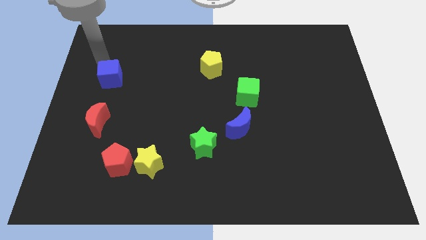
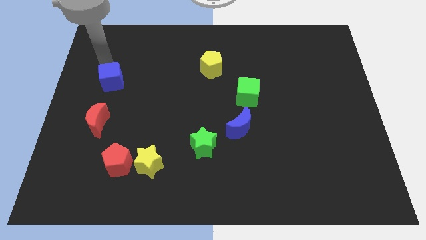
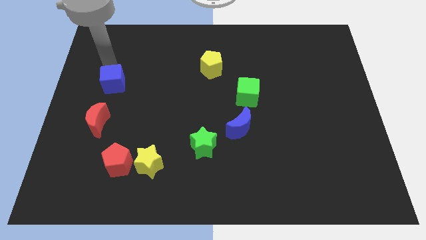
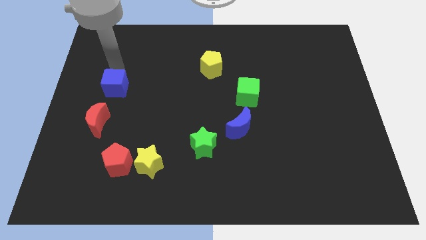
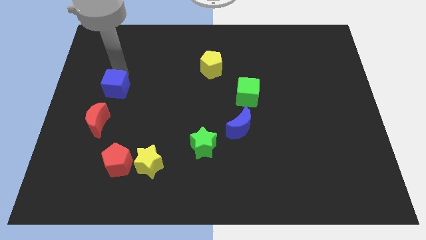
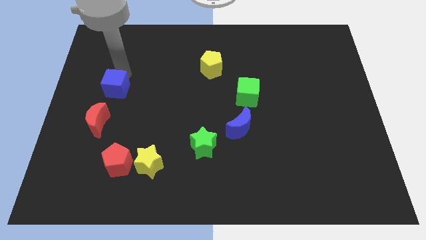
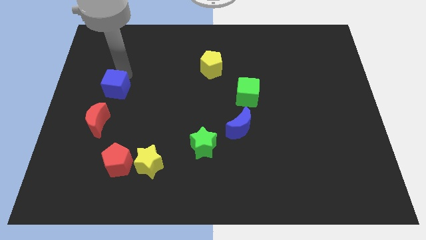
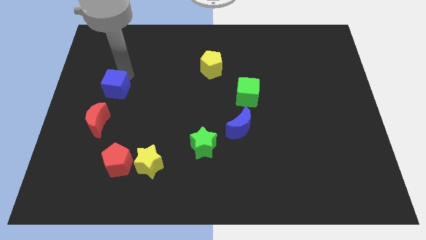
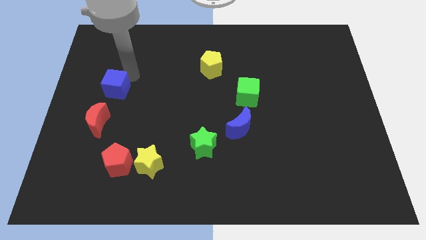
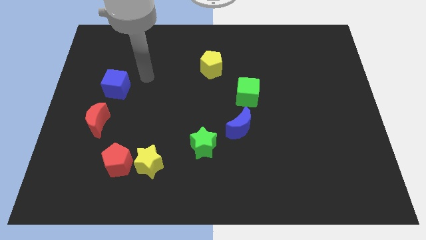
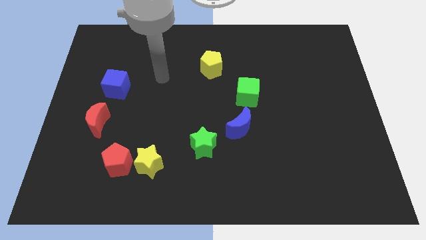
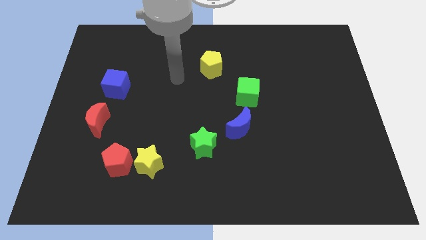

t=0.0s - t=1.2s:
move the blue cube above the red crescent

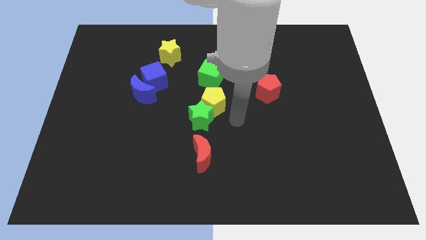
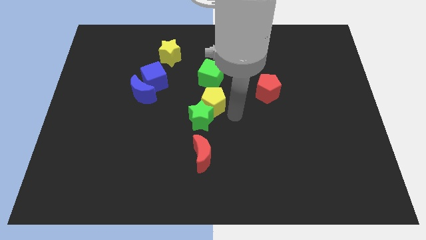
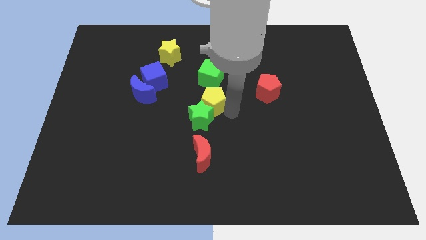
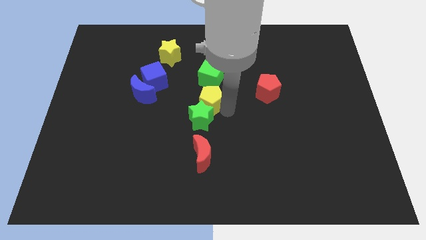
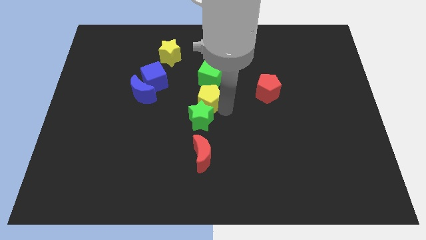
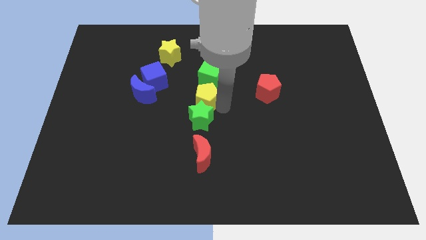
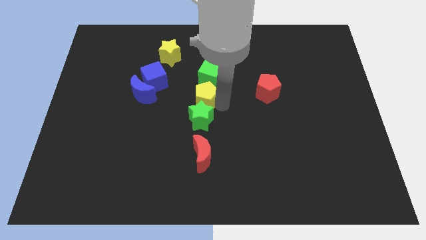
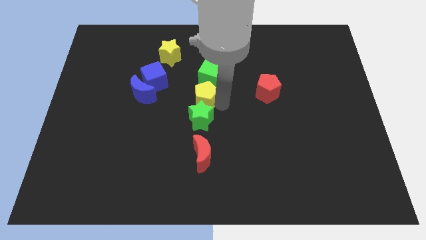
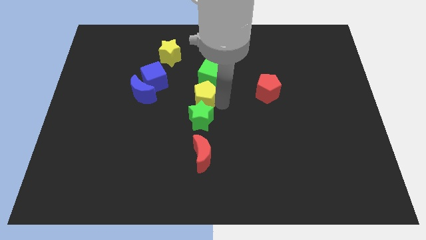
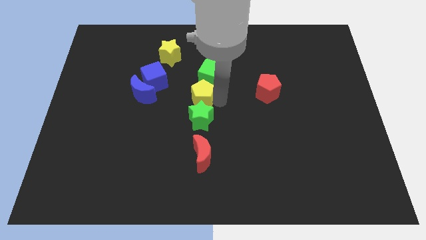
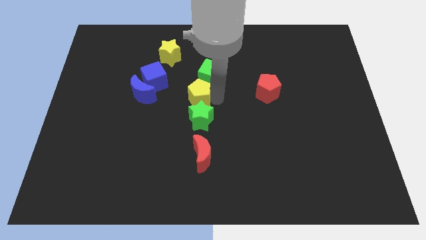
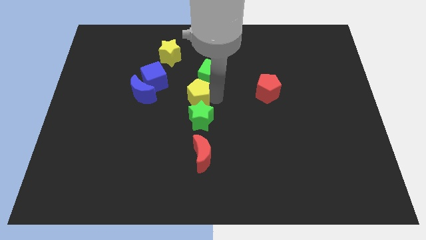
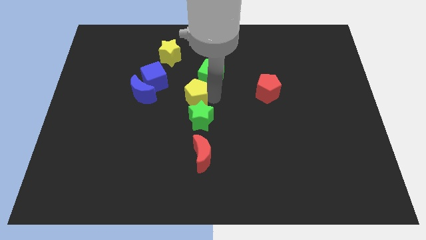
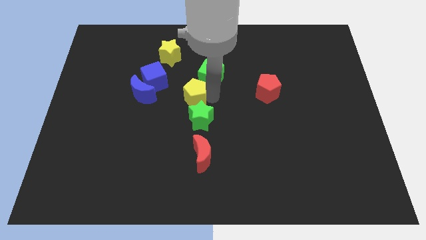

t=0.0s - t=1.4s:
move the yellow star slightly to the left of the board

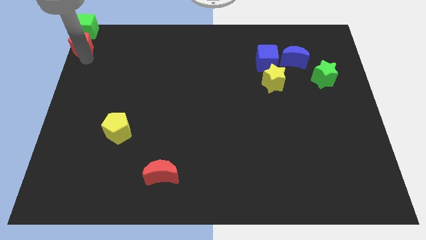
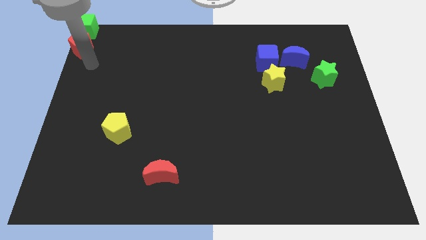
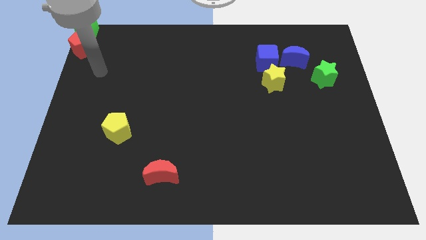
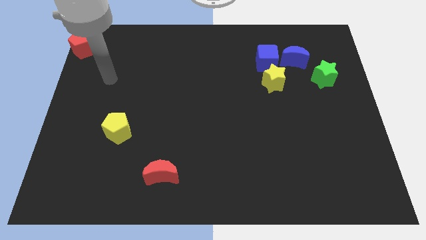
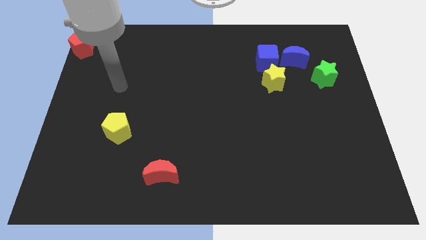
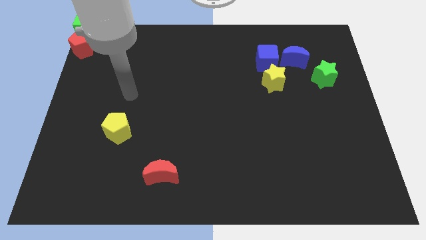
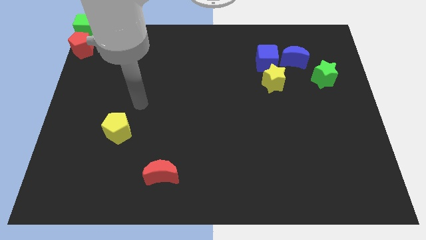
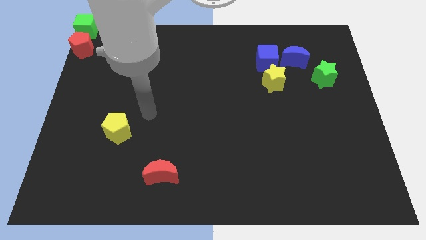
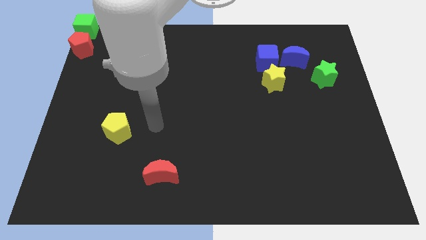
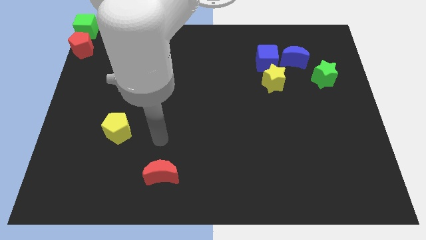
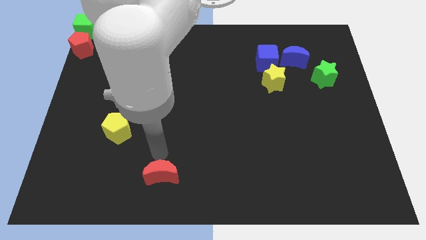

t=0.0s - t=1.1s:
move the arm away from red pentagon

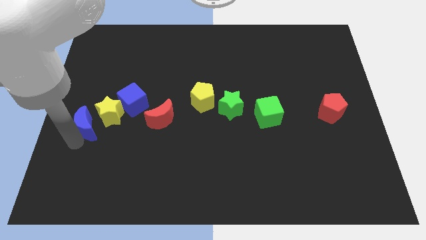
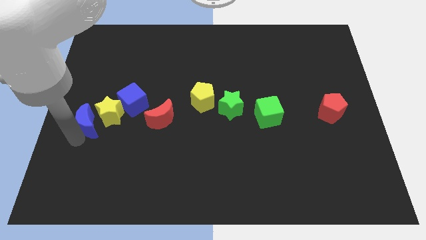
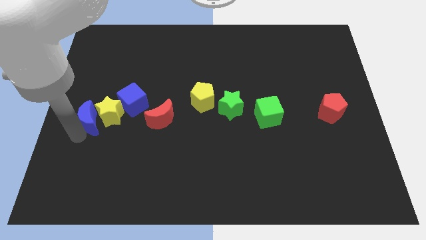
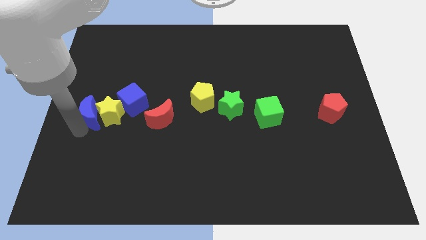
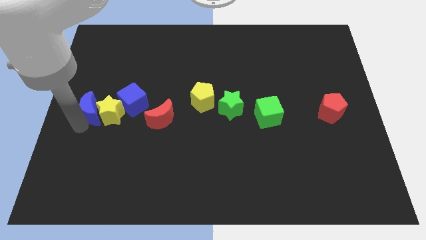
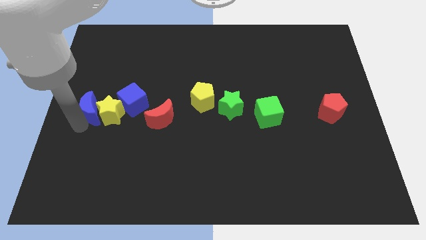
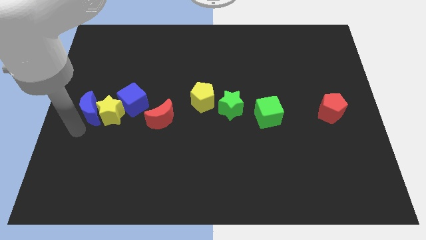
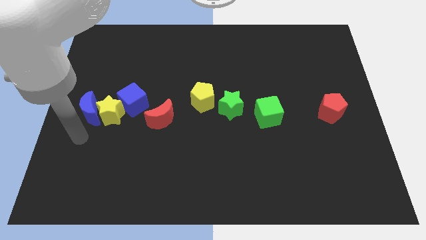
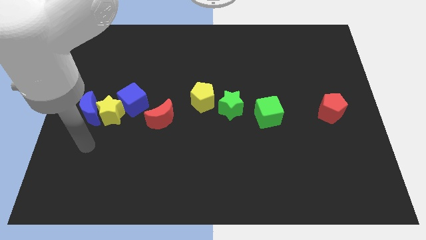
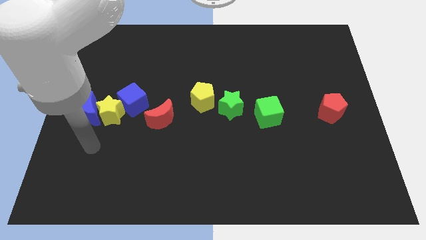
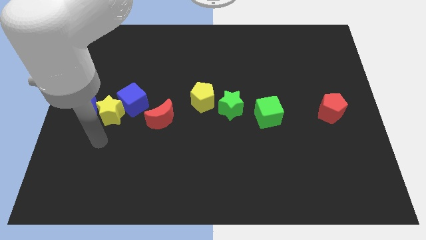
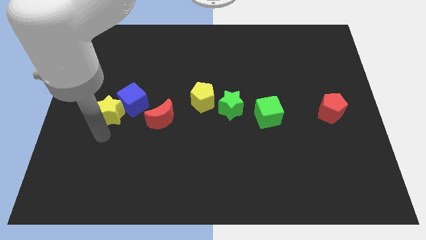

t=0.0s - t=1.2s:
push the blue moon into the yellow star

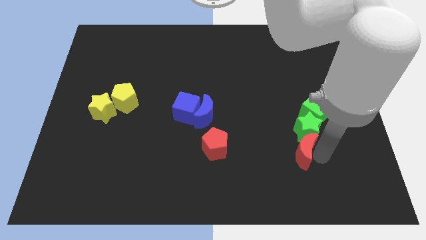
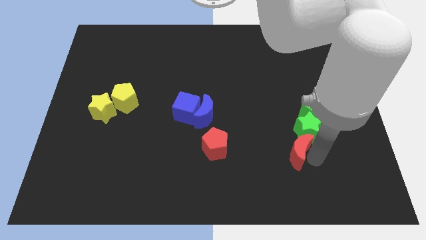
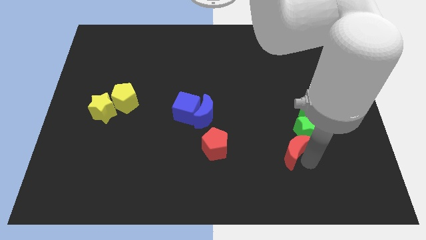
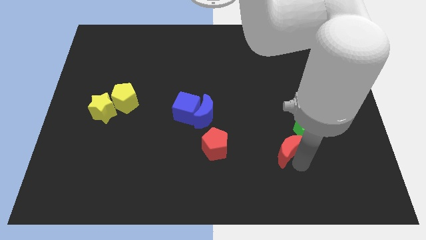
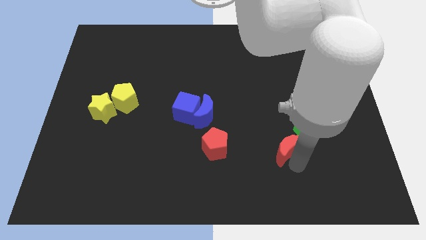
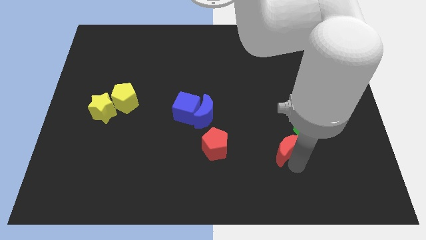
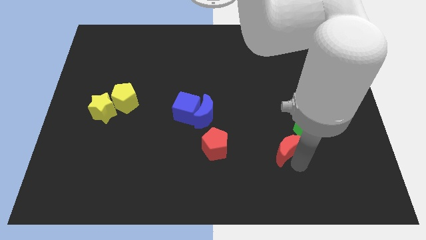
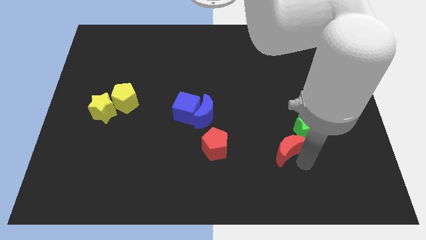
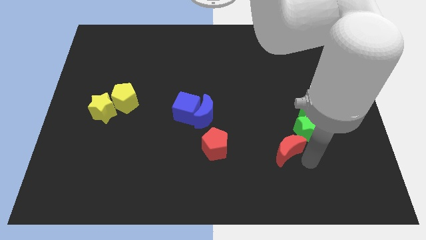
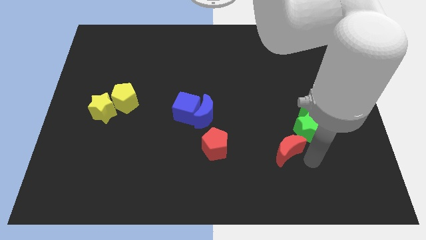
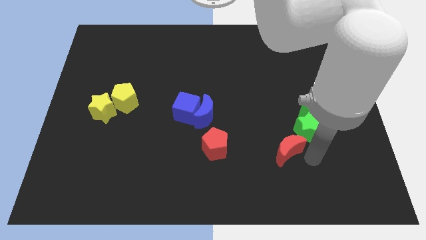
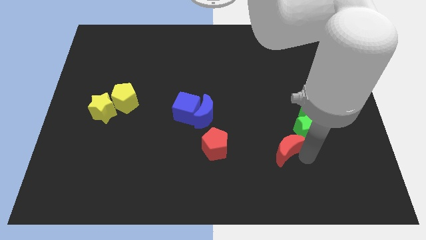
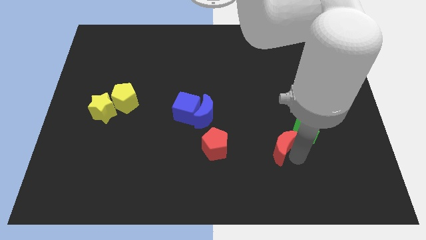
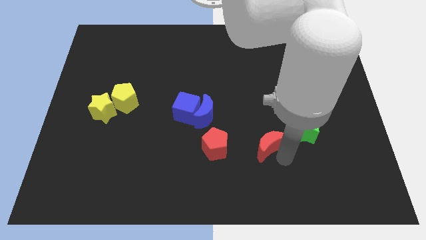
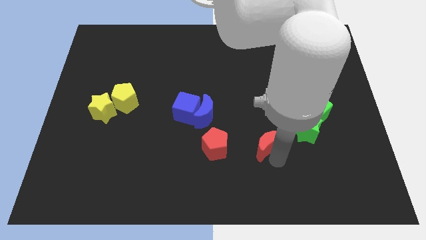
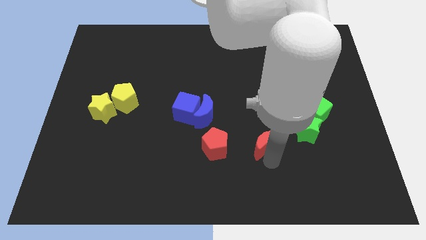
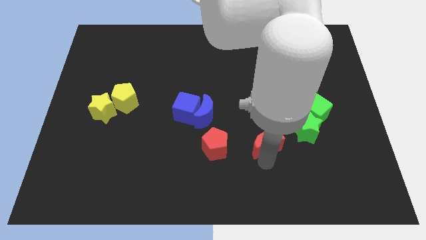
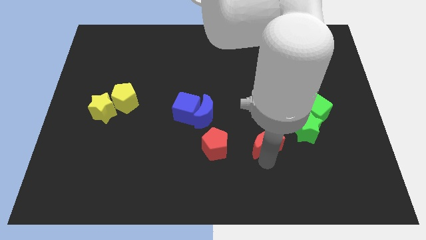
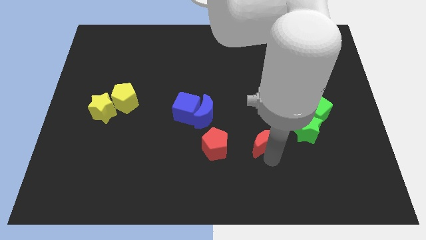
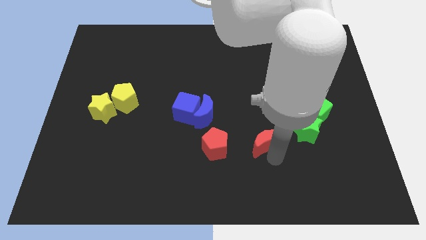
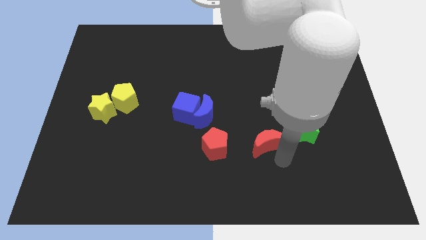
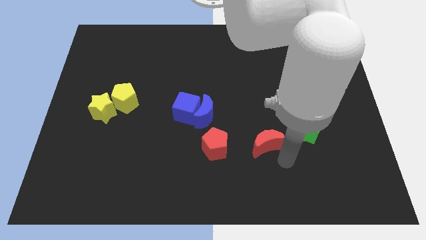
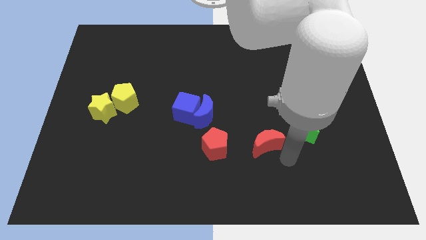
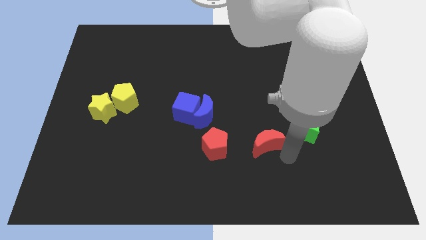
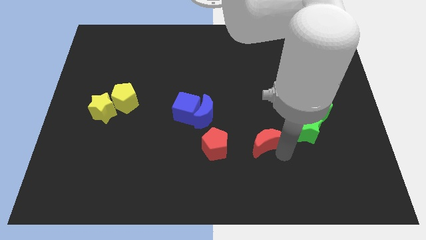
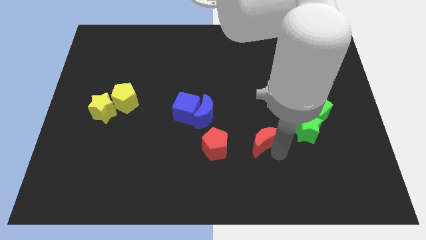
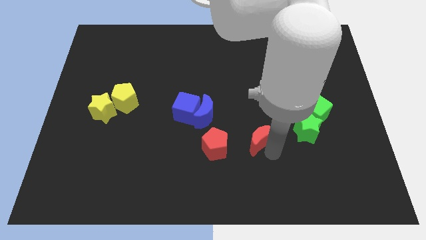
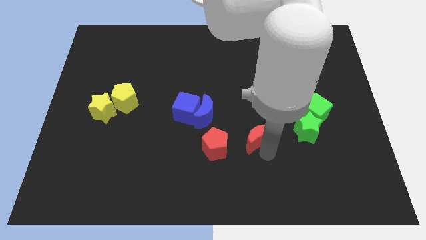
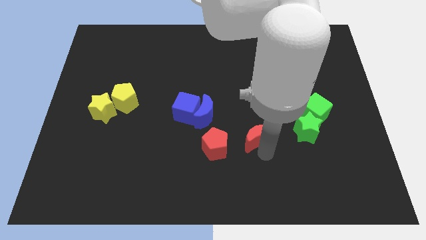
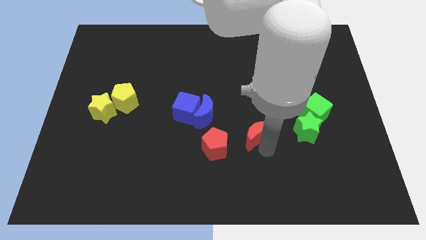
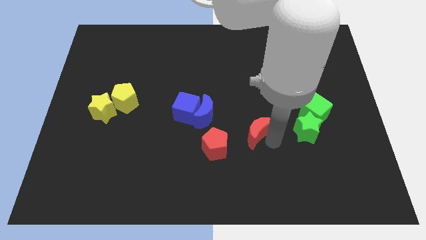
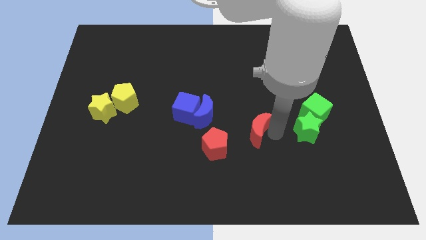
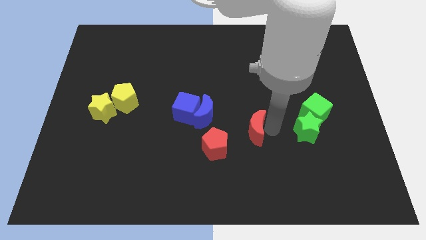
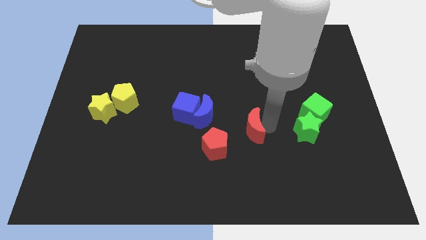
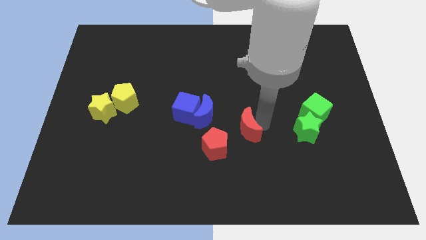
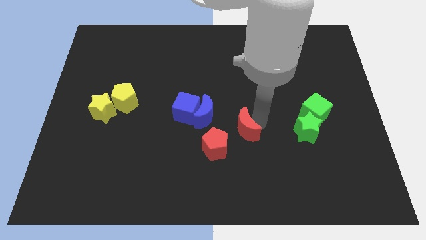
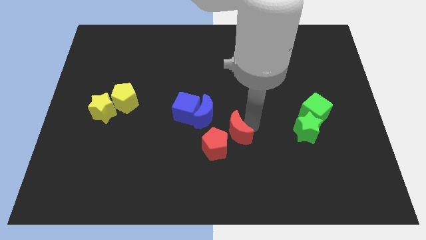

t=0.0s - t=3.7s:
move the red moon to the red pentagon

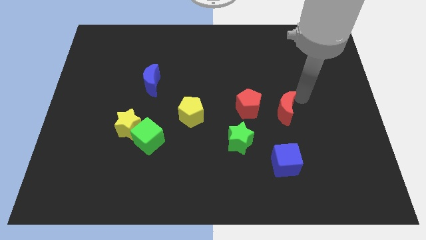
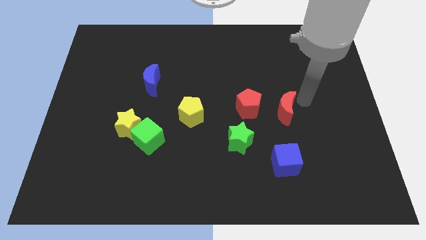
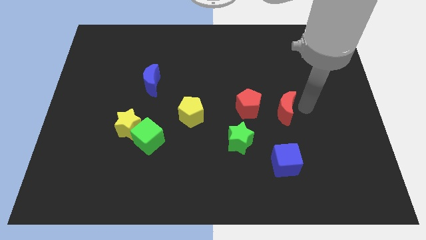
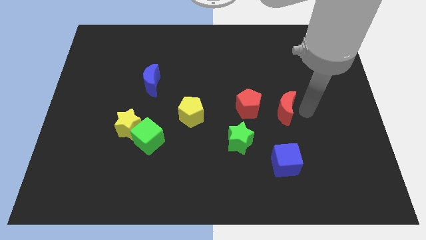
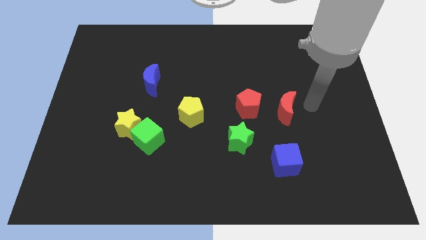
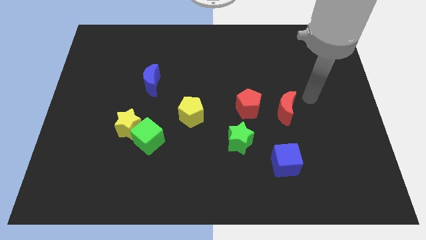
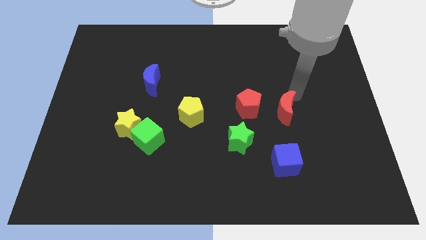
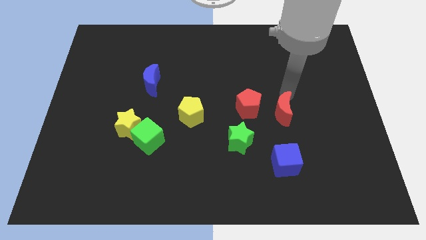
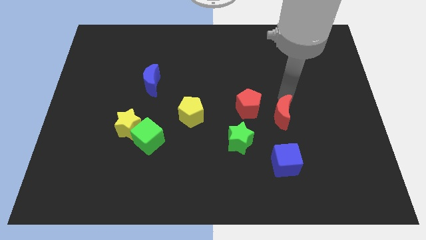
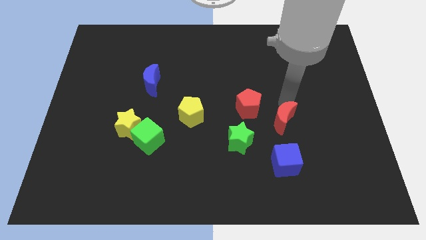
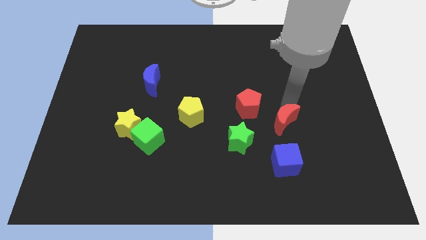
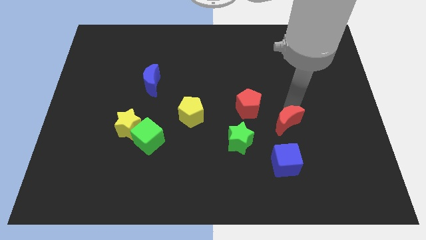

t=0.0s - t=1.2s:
move red moon to the top of blue cube
